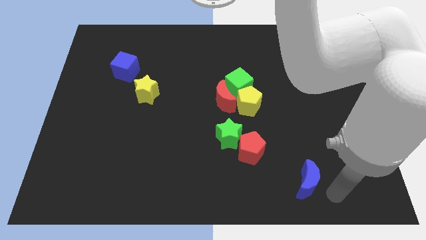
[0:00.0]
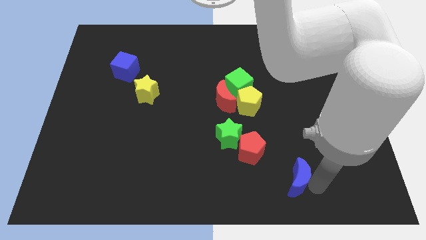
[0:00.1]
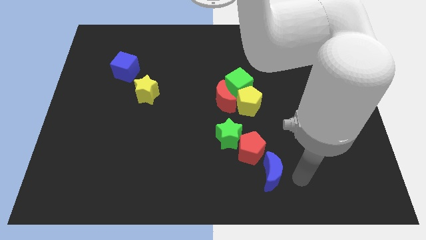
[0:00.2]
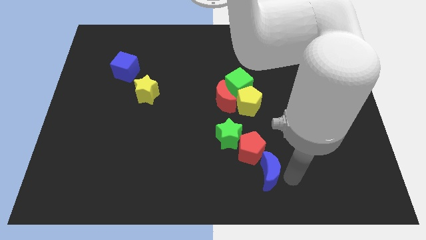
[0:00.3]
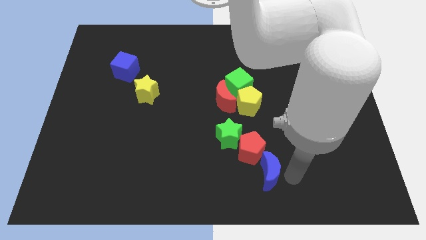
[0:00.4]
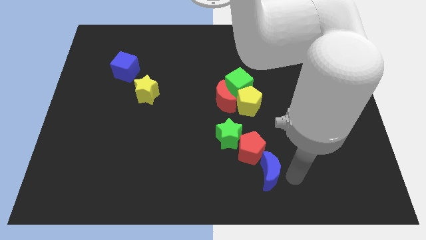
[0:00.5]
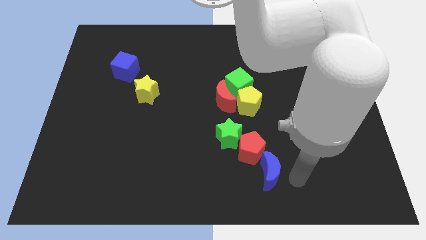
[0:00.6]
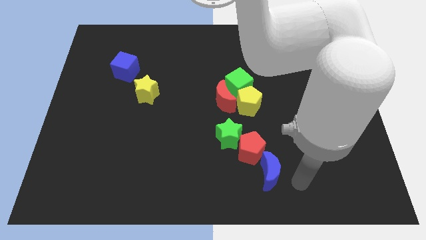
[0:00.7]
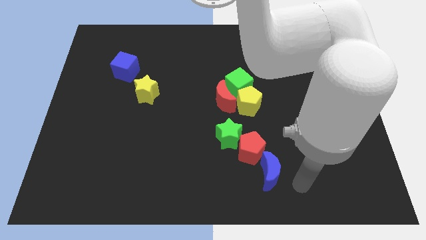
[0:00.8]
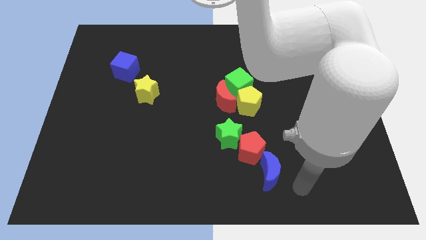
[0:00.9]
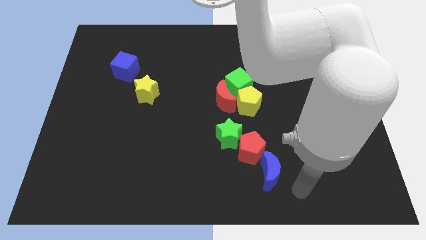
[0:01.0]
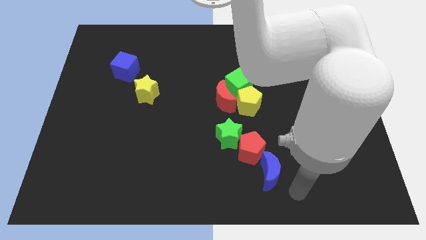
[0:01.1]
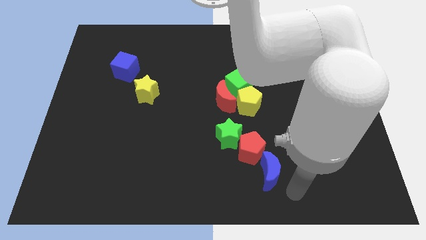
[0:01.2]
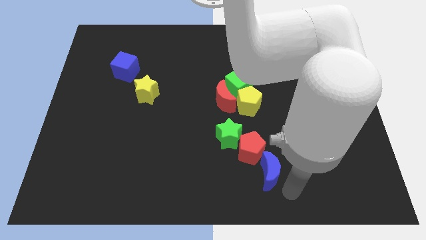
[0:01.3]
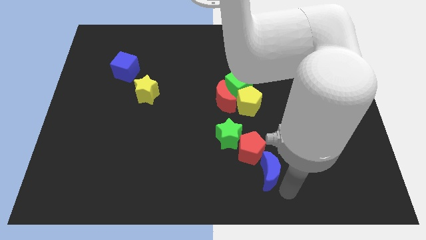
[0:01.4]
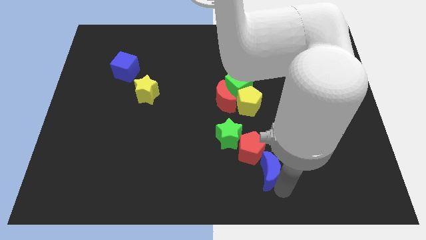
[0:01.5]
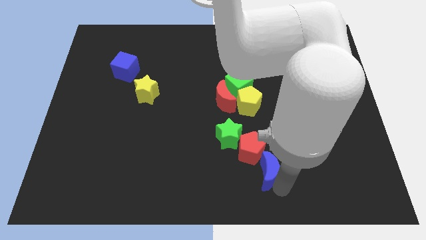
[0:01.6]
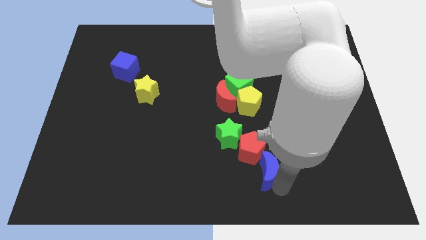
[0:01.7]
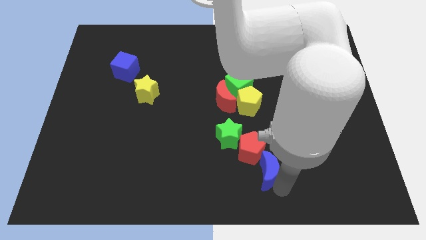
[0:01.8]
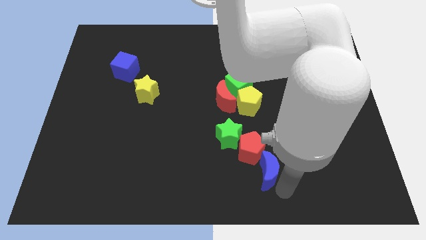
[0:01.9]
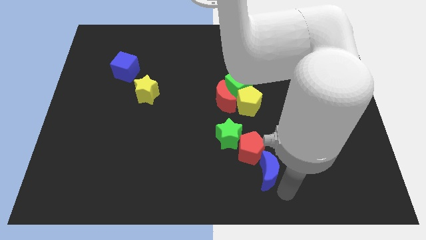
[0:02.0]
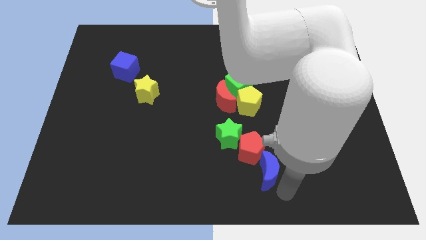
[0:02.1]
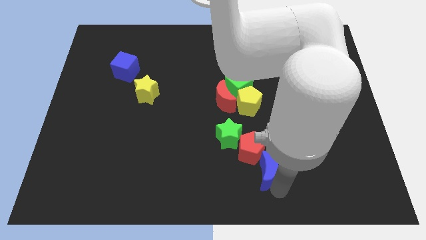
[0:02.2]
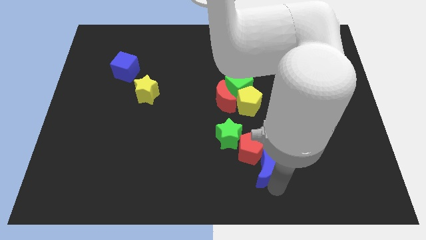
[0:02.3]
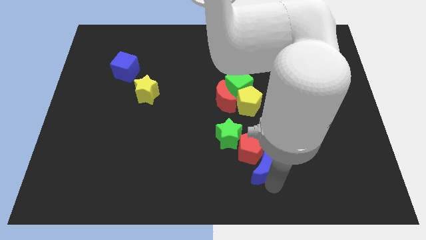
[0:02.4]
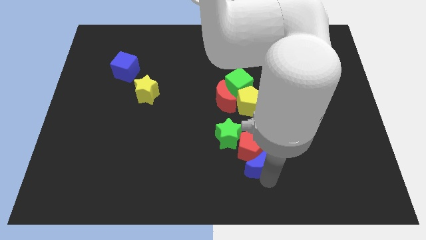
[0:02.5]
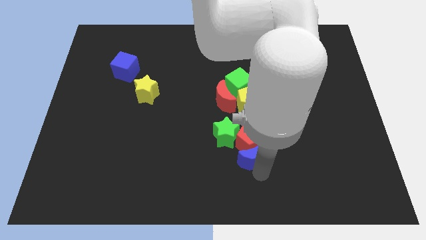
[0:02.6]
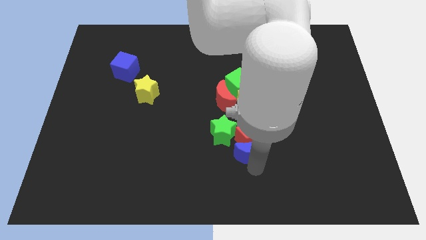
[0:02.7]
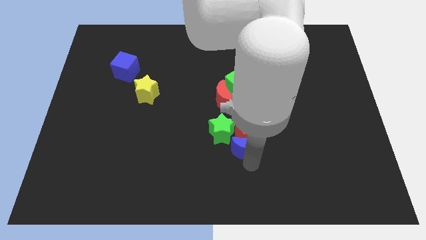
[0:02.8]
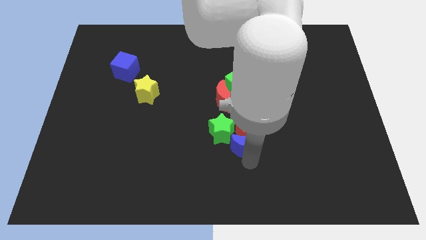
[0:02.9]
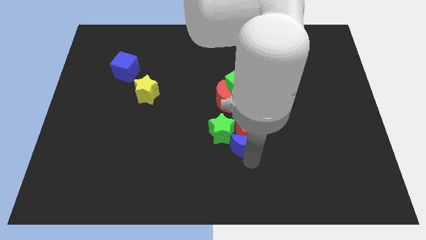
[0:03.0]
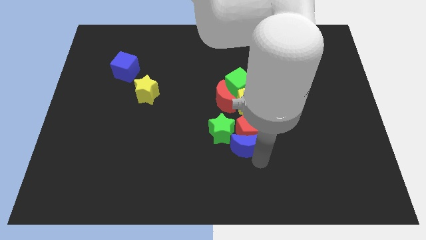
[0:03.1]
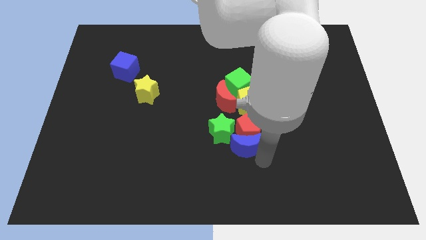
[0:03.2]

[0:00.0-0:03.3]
push the blue crescent into the red pentagon

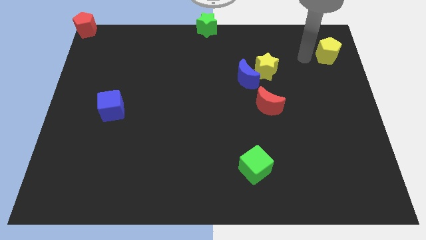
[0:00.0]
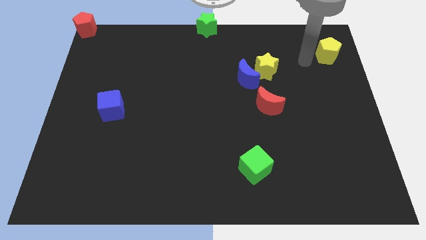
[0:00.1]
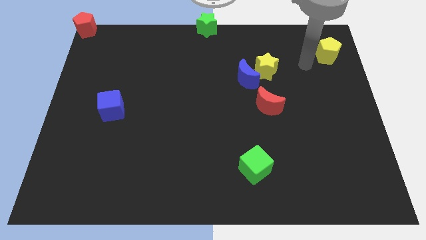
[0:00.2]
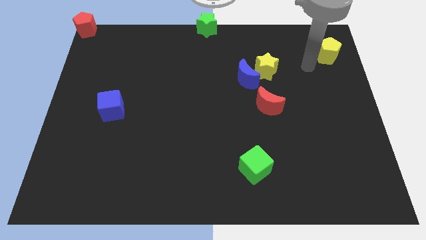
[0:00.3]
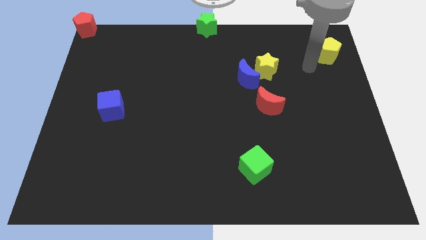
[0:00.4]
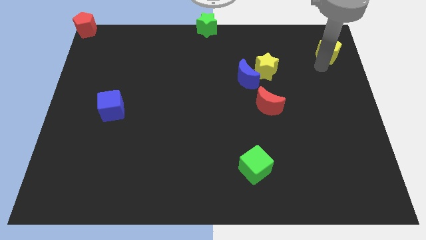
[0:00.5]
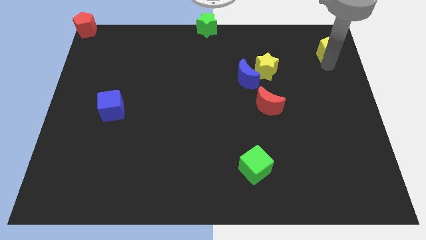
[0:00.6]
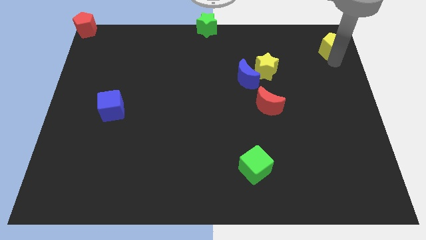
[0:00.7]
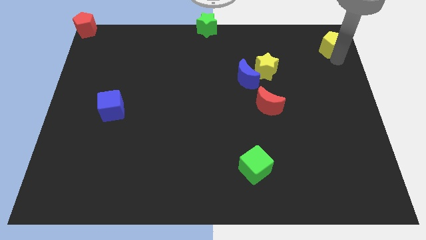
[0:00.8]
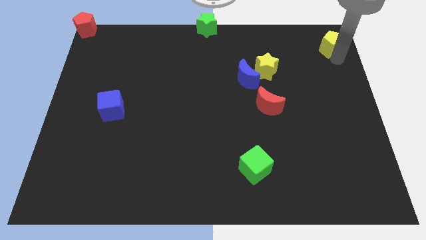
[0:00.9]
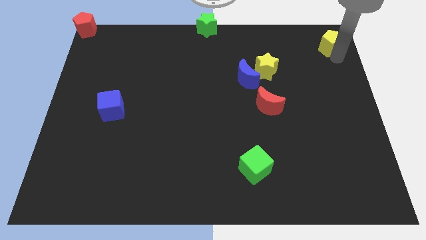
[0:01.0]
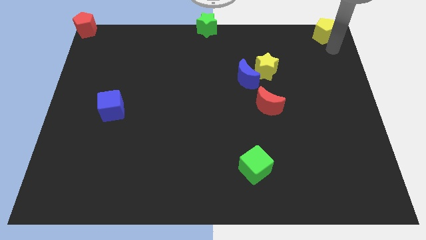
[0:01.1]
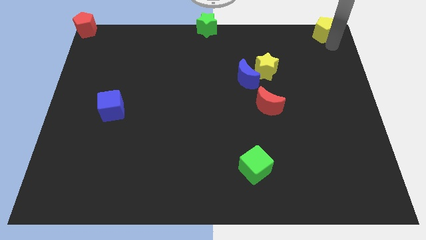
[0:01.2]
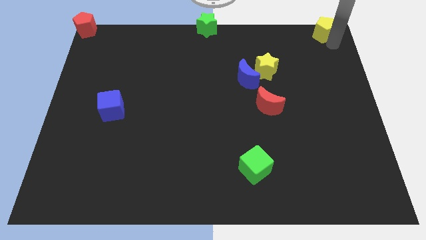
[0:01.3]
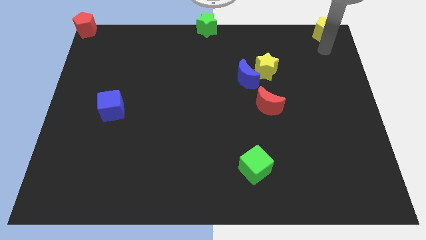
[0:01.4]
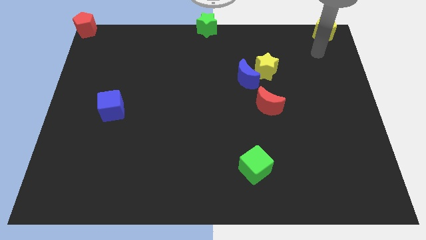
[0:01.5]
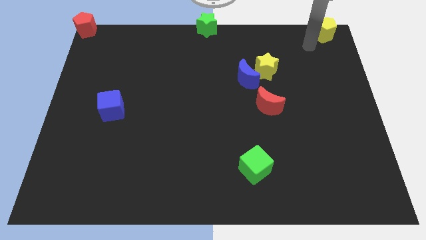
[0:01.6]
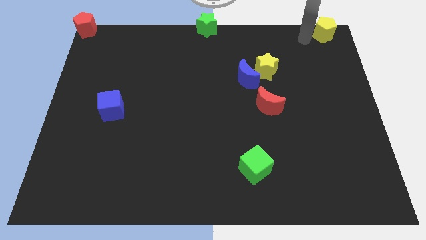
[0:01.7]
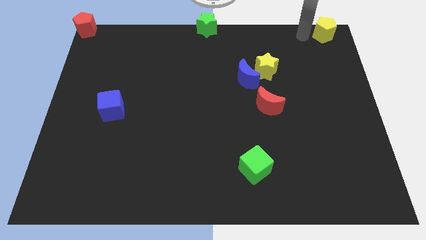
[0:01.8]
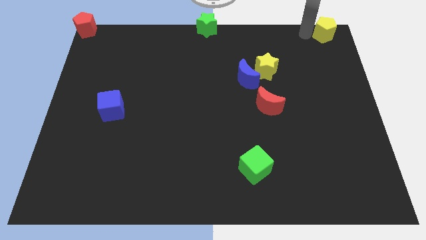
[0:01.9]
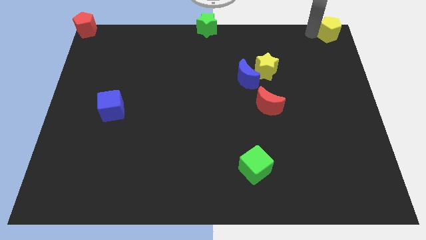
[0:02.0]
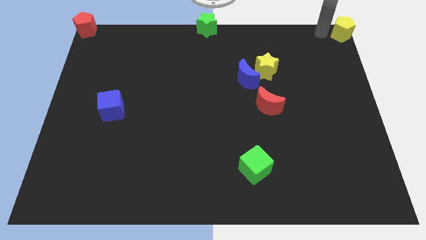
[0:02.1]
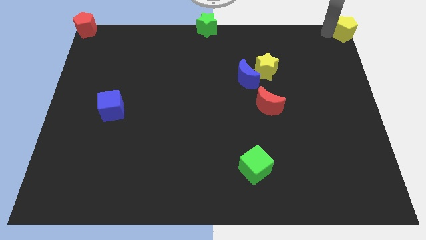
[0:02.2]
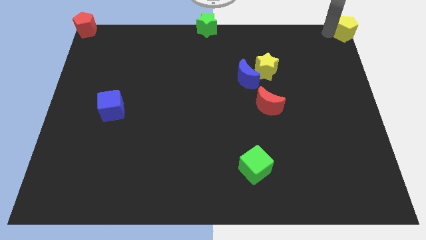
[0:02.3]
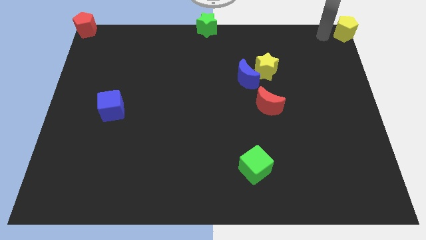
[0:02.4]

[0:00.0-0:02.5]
place the yellow pentagon top right of the board

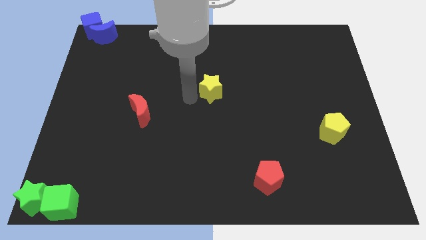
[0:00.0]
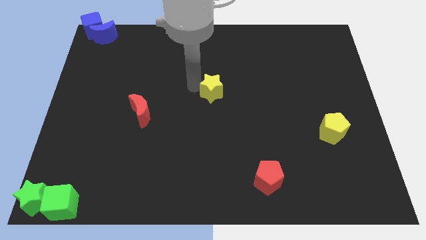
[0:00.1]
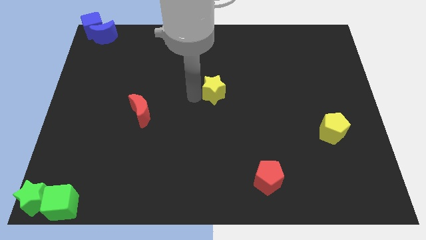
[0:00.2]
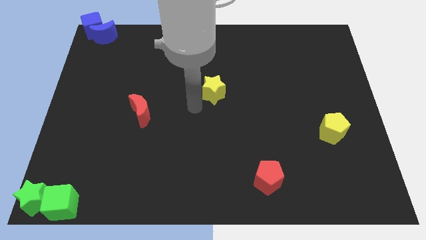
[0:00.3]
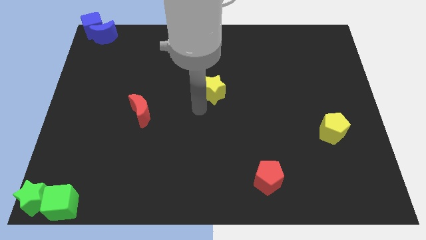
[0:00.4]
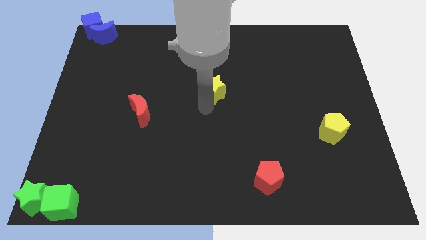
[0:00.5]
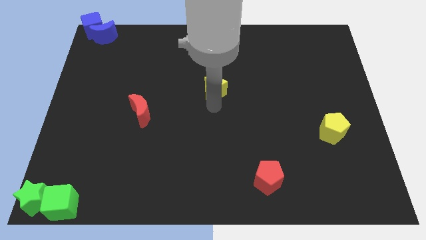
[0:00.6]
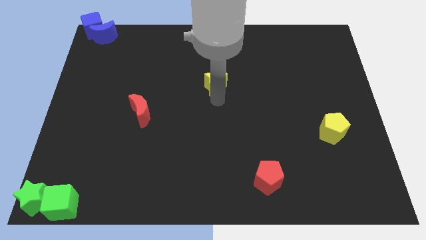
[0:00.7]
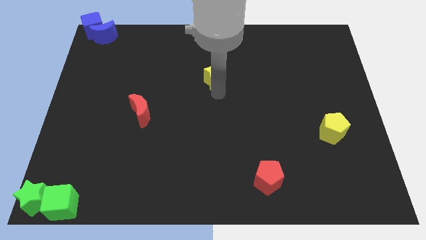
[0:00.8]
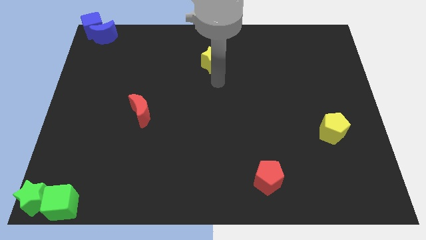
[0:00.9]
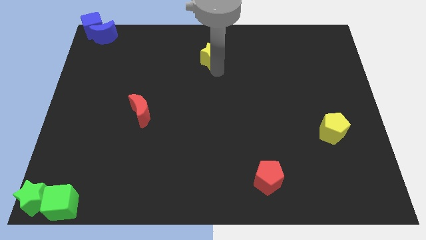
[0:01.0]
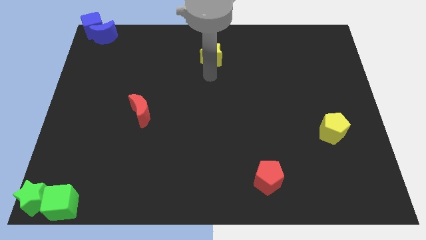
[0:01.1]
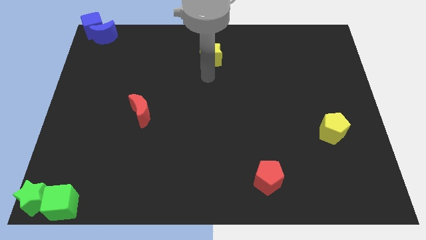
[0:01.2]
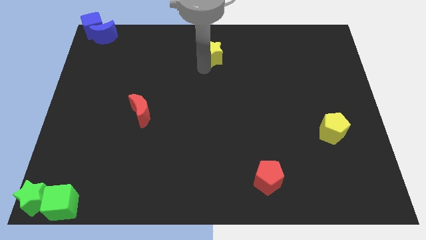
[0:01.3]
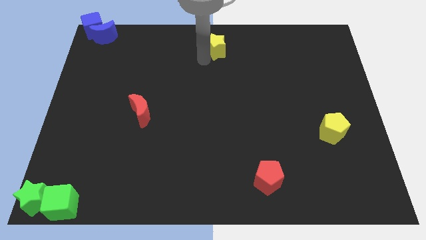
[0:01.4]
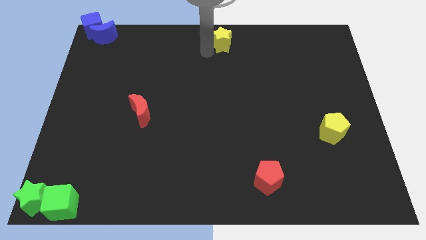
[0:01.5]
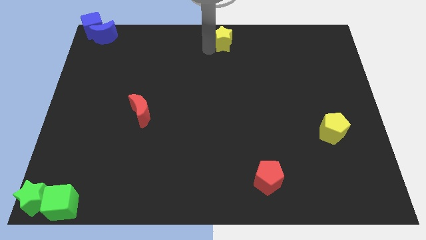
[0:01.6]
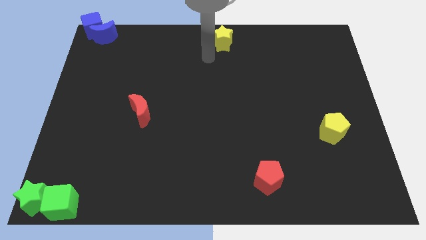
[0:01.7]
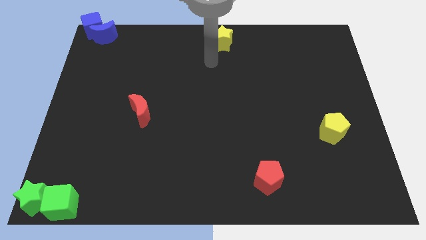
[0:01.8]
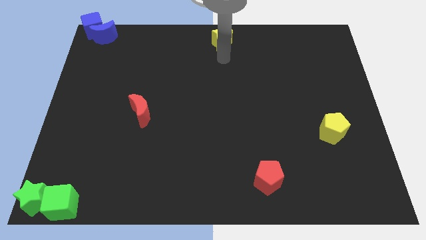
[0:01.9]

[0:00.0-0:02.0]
push the yellow star to the top side

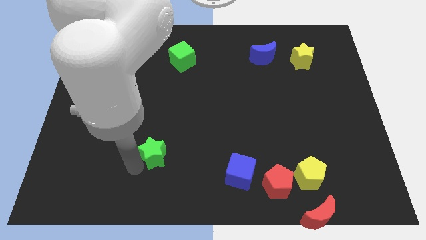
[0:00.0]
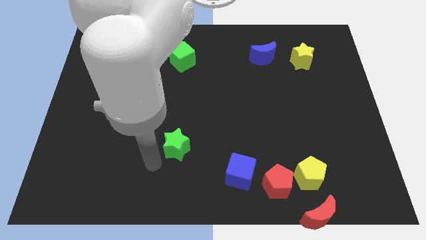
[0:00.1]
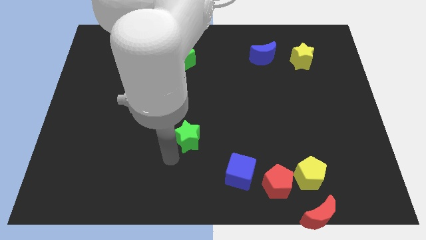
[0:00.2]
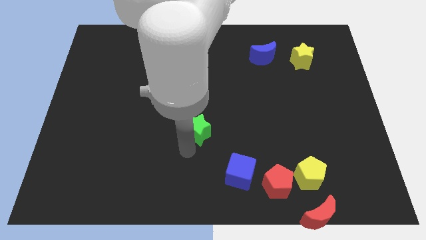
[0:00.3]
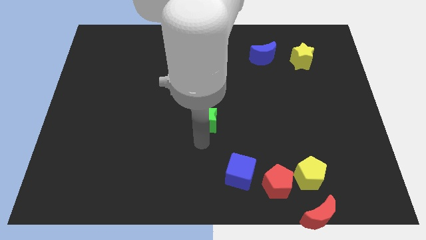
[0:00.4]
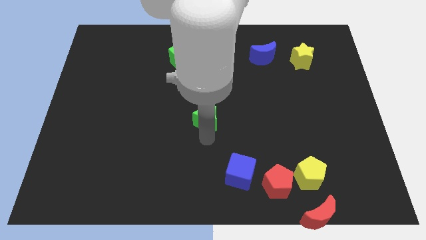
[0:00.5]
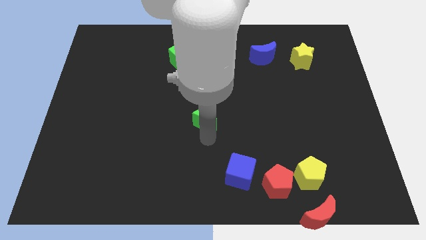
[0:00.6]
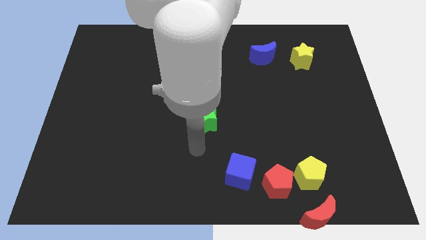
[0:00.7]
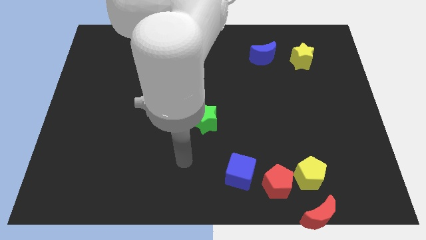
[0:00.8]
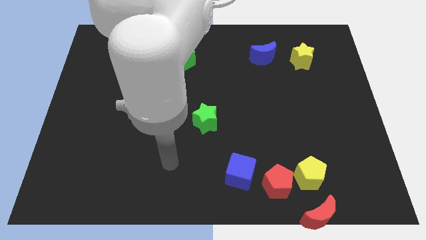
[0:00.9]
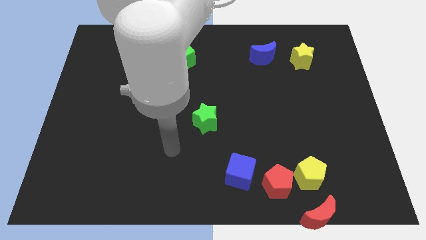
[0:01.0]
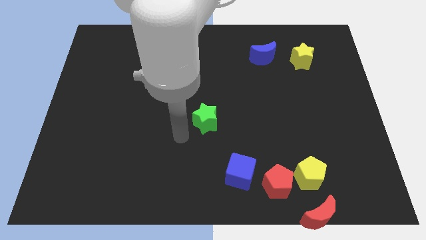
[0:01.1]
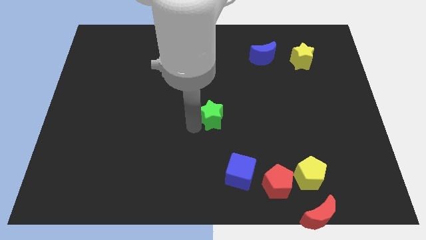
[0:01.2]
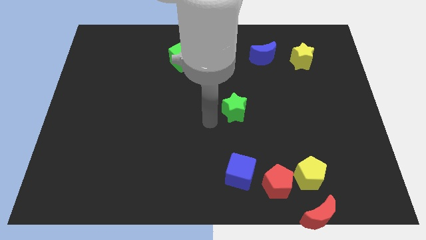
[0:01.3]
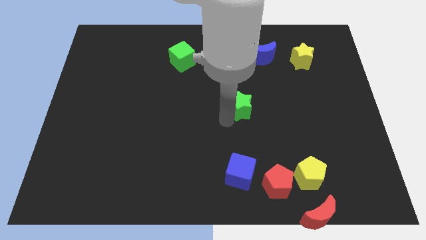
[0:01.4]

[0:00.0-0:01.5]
push the green star above the blue cube
